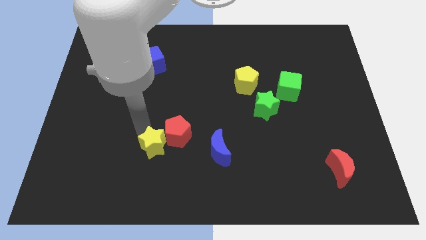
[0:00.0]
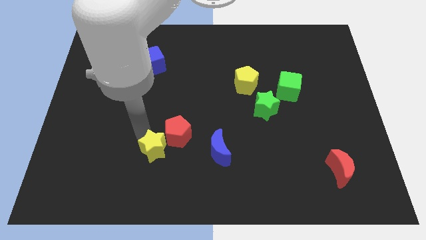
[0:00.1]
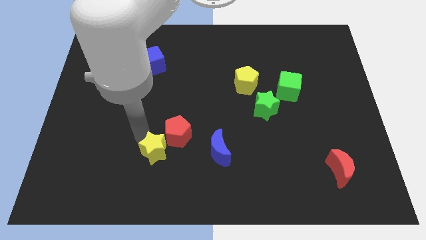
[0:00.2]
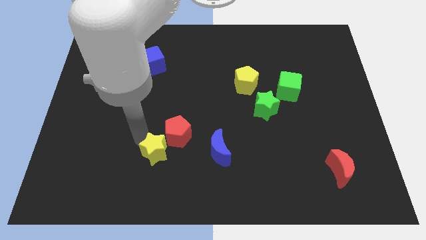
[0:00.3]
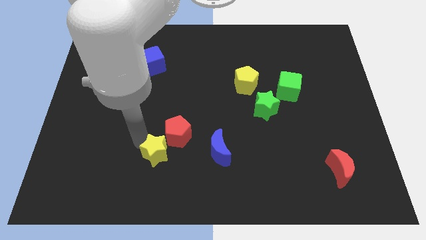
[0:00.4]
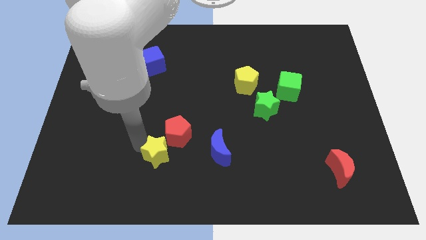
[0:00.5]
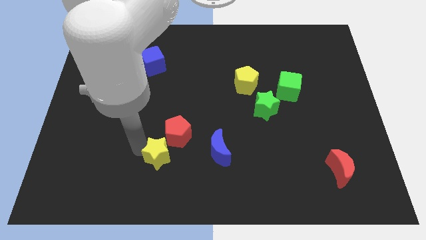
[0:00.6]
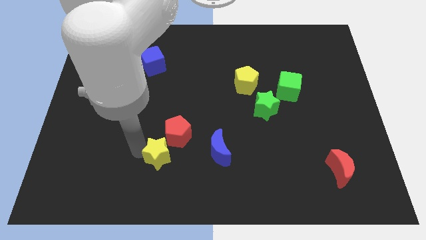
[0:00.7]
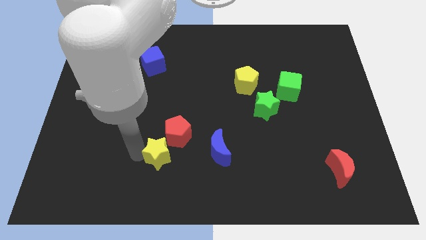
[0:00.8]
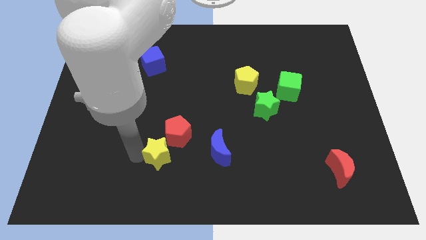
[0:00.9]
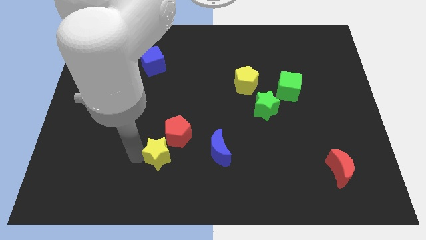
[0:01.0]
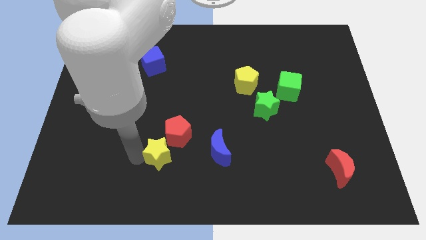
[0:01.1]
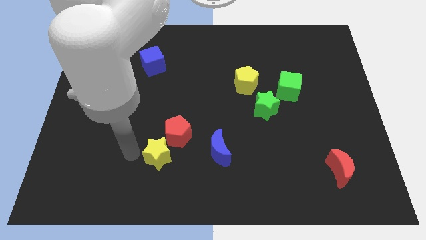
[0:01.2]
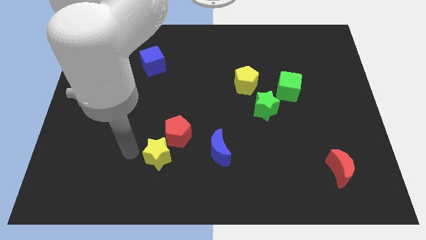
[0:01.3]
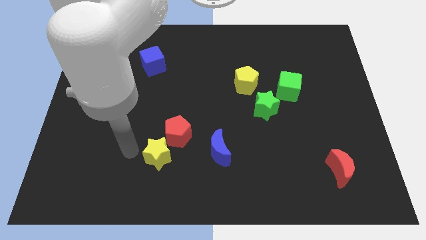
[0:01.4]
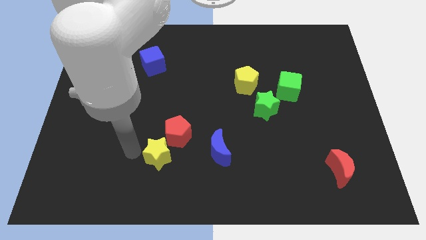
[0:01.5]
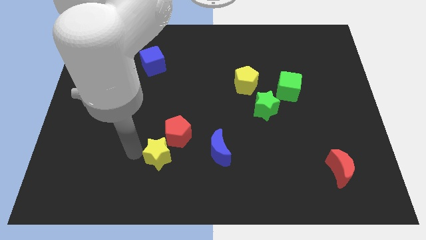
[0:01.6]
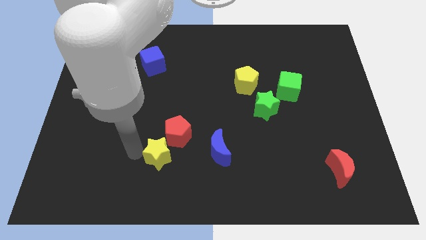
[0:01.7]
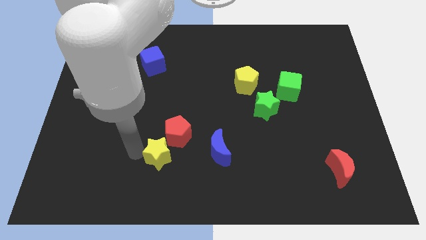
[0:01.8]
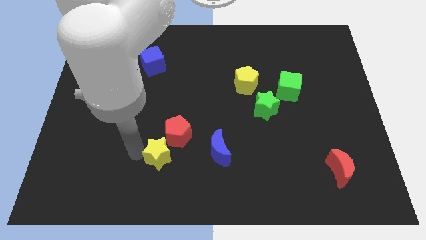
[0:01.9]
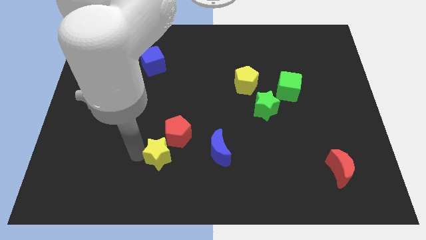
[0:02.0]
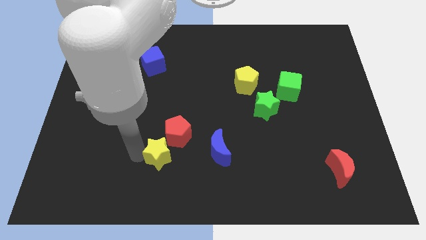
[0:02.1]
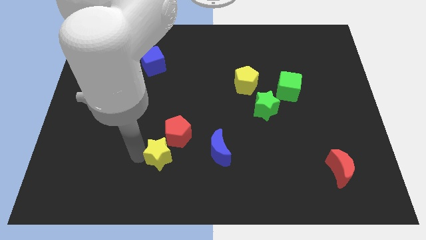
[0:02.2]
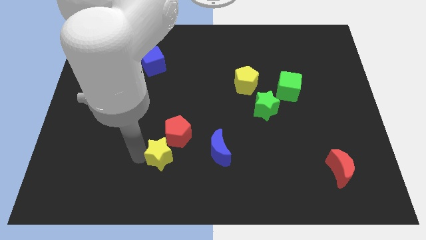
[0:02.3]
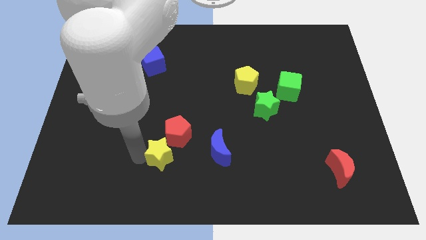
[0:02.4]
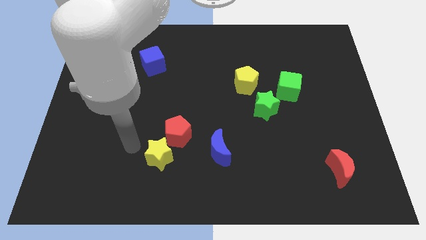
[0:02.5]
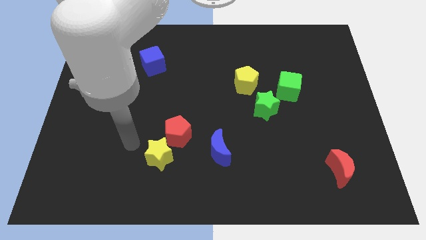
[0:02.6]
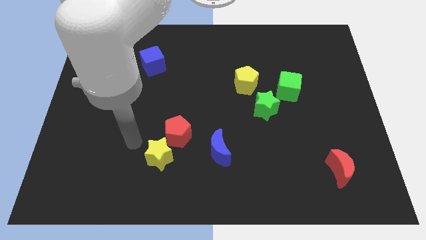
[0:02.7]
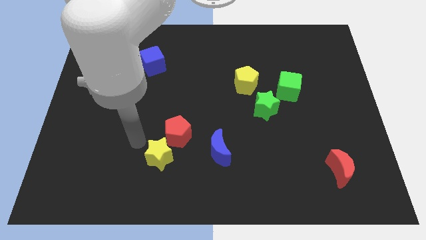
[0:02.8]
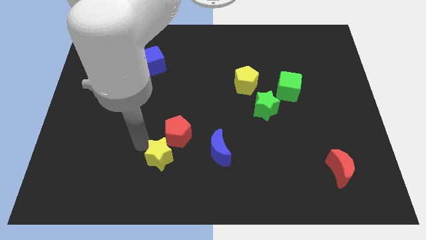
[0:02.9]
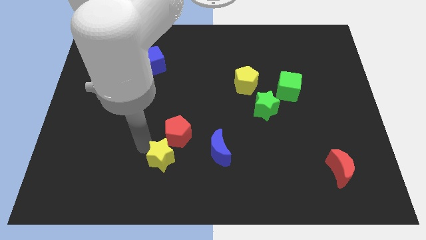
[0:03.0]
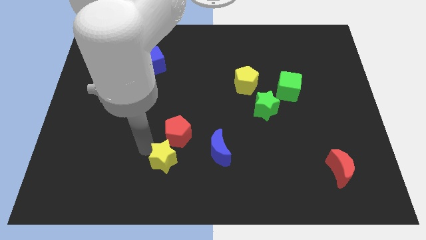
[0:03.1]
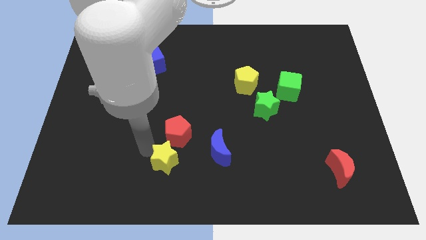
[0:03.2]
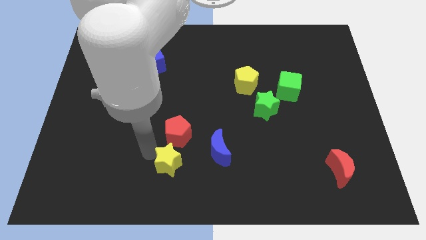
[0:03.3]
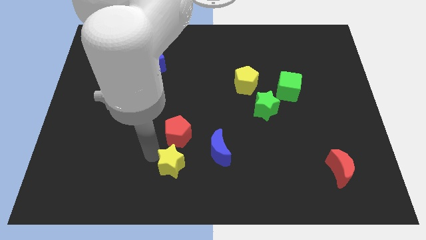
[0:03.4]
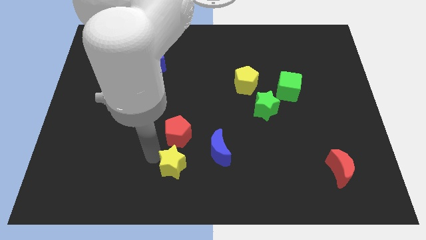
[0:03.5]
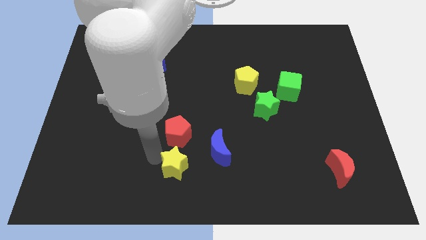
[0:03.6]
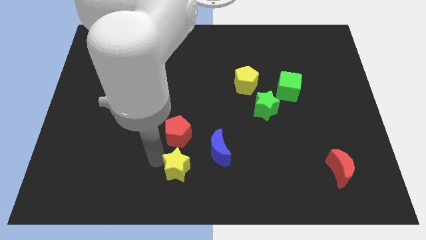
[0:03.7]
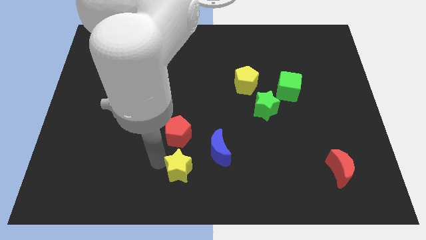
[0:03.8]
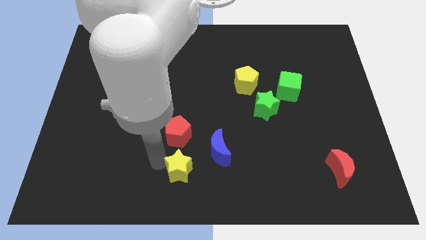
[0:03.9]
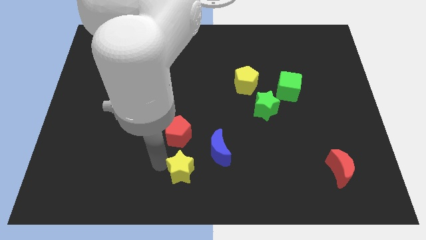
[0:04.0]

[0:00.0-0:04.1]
push the yellow star towards the bottom side of the board

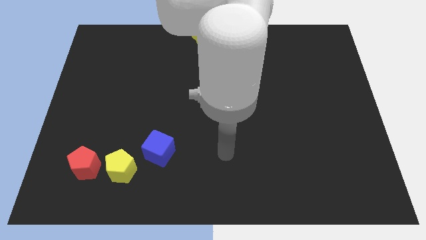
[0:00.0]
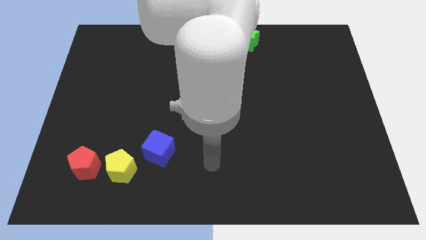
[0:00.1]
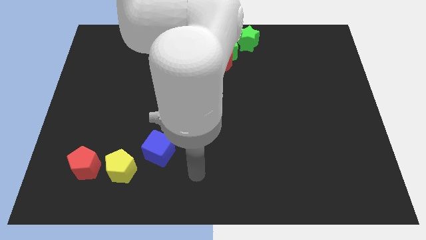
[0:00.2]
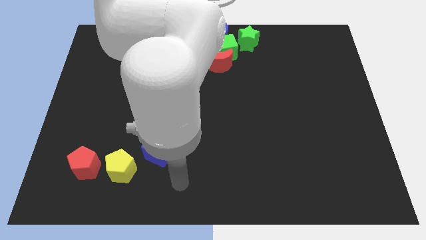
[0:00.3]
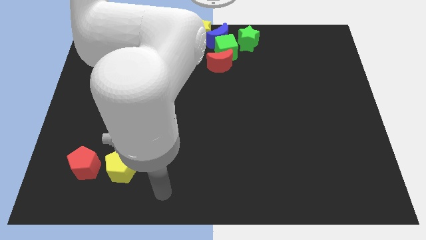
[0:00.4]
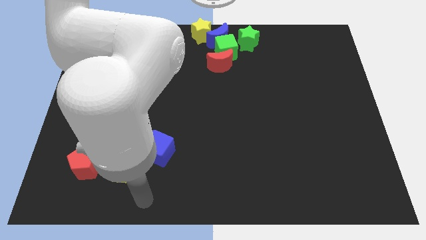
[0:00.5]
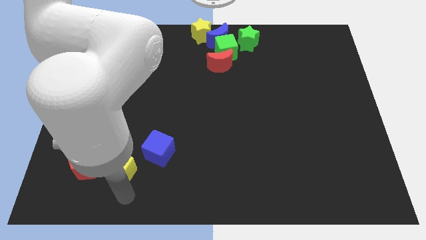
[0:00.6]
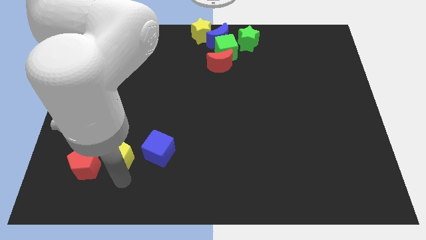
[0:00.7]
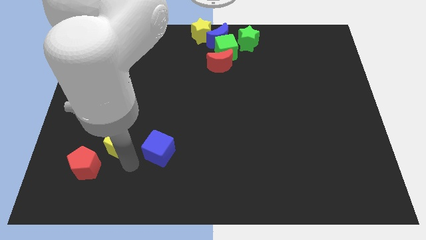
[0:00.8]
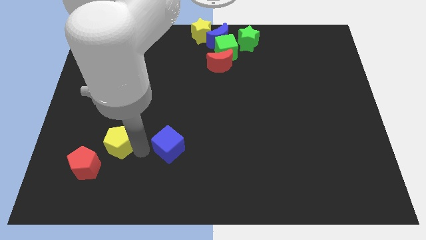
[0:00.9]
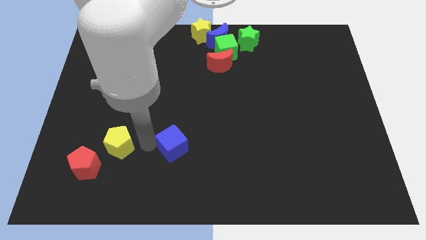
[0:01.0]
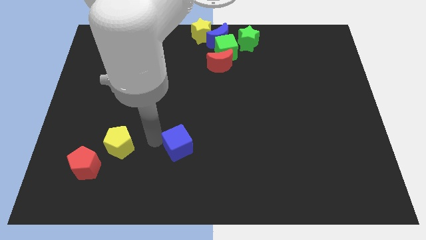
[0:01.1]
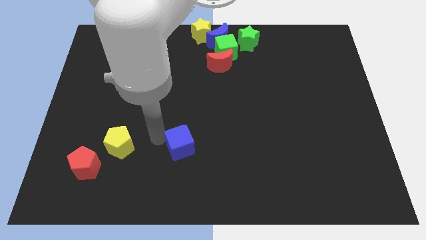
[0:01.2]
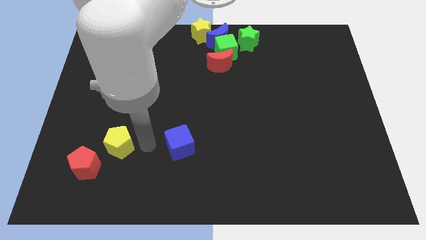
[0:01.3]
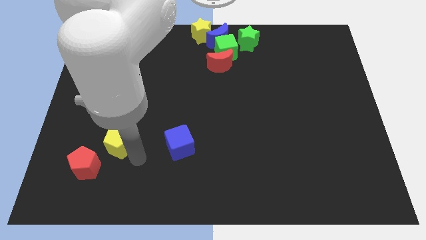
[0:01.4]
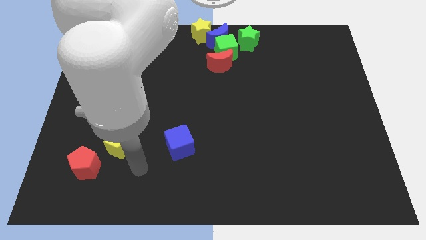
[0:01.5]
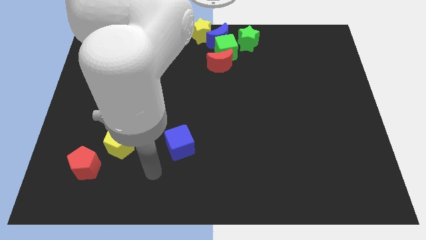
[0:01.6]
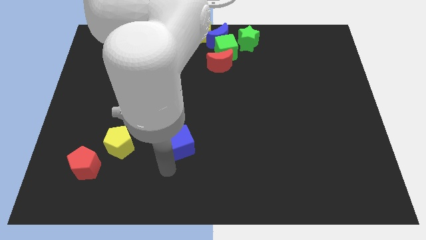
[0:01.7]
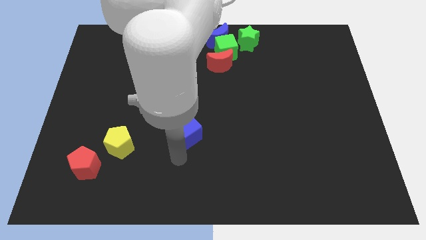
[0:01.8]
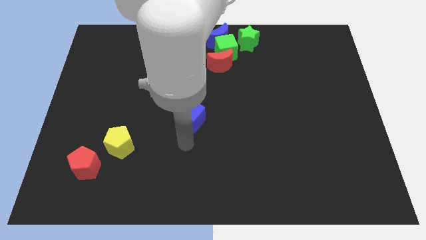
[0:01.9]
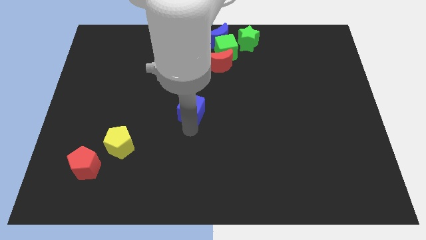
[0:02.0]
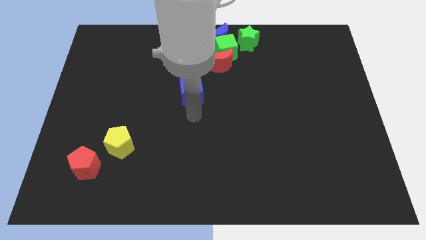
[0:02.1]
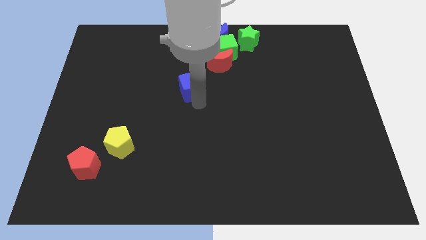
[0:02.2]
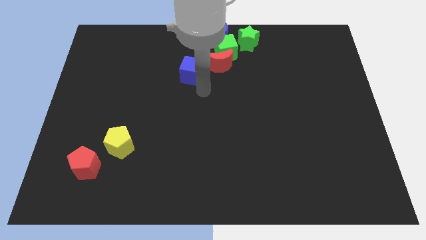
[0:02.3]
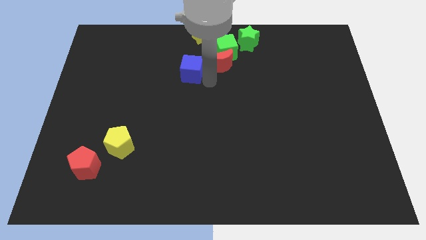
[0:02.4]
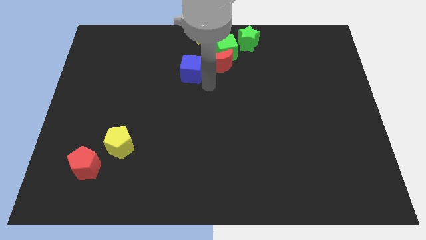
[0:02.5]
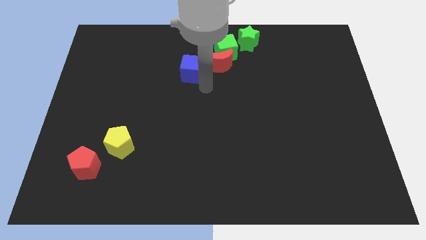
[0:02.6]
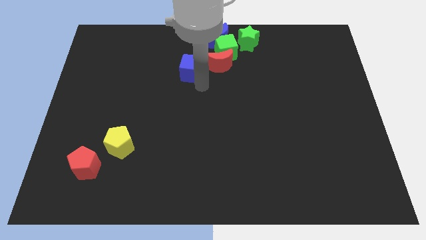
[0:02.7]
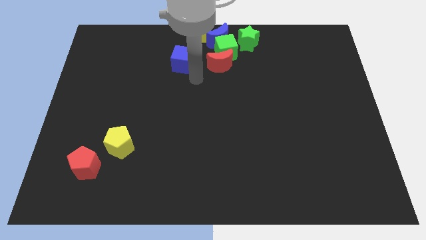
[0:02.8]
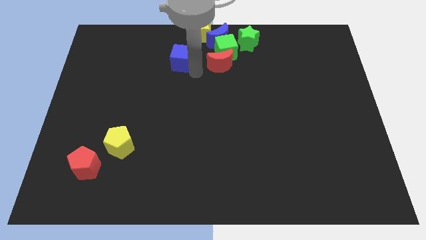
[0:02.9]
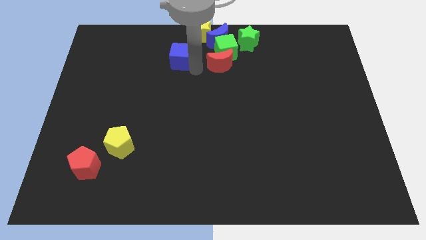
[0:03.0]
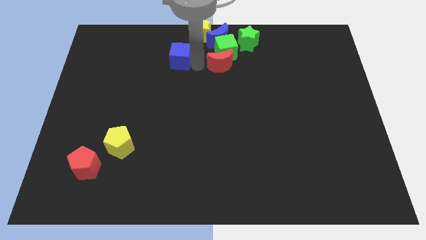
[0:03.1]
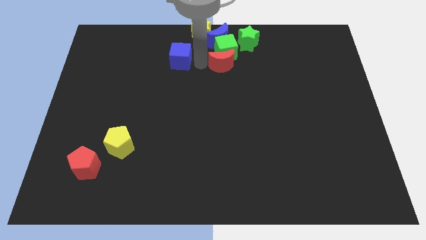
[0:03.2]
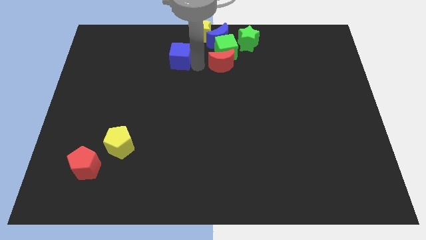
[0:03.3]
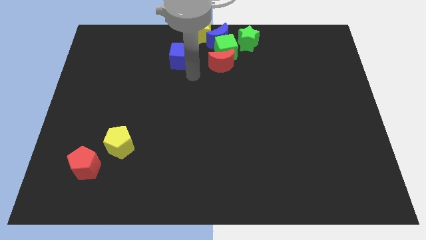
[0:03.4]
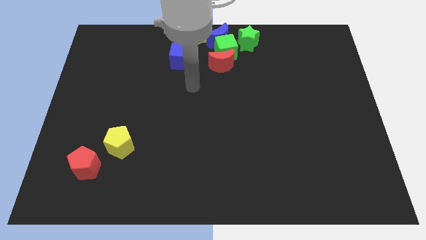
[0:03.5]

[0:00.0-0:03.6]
push the blue cube beside the red crescent

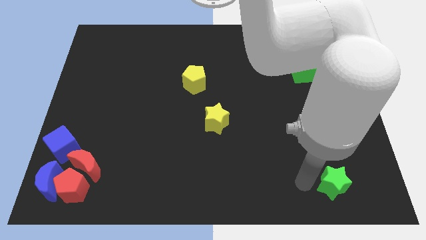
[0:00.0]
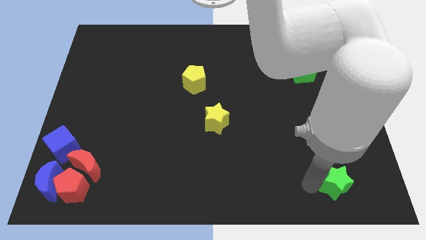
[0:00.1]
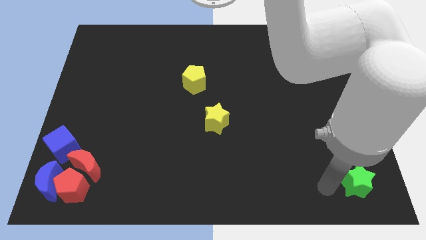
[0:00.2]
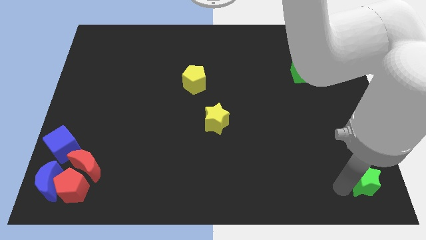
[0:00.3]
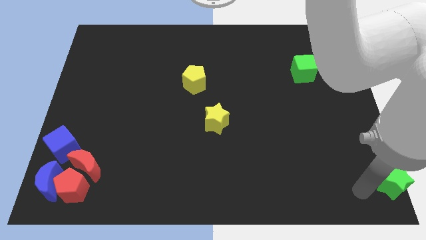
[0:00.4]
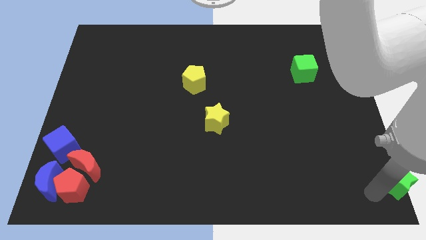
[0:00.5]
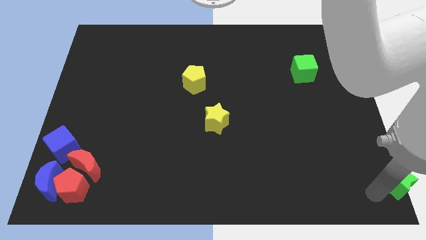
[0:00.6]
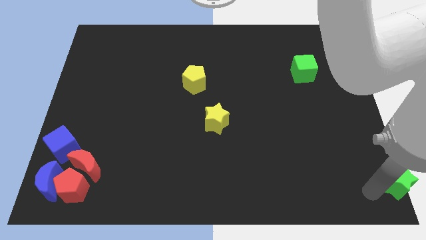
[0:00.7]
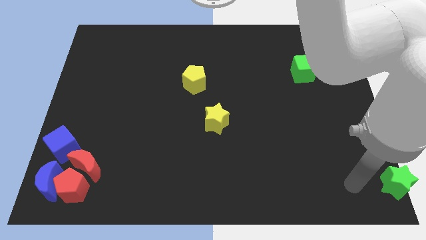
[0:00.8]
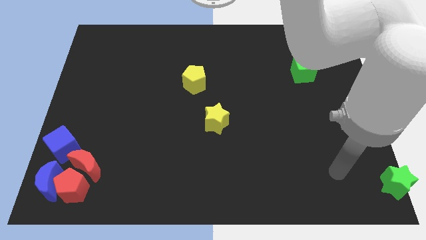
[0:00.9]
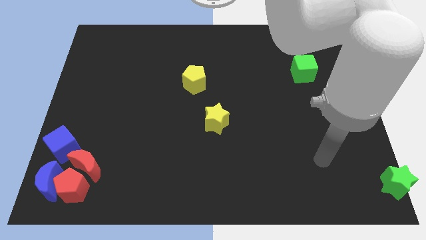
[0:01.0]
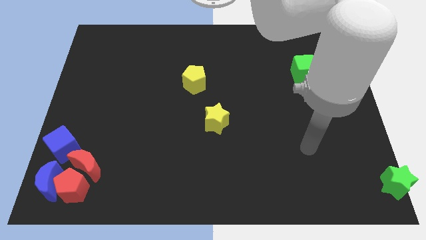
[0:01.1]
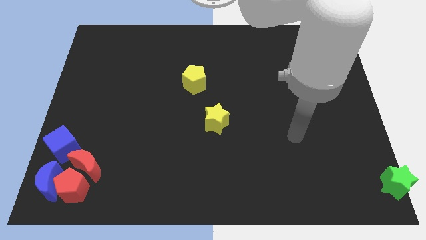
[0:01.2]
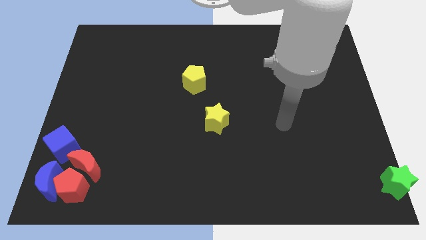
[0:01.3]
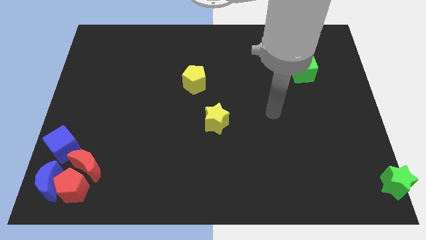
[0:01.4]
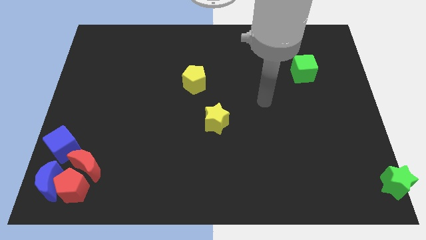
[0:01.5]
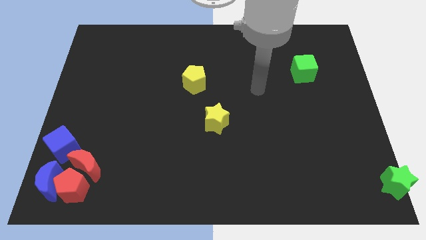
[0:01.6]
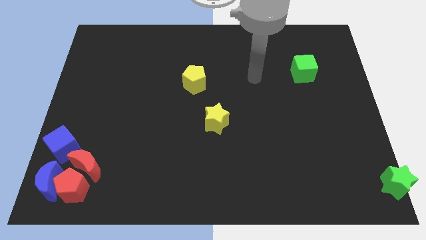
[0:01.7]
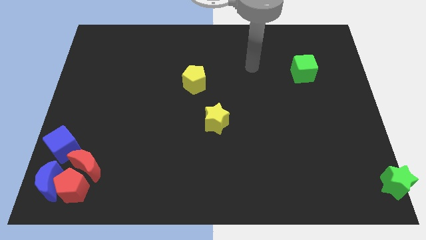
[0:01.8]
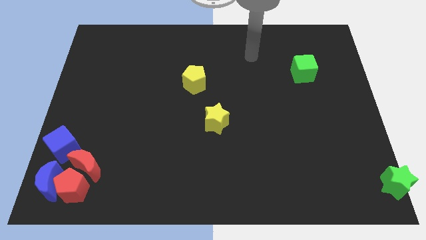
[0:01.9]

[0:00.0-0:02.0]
move the green star to the bottom right of the board
